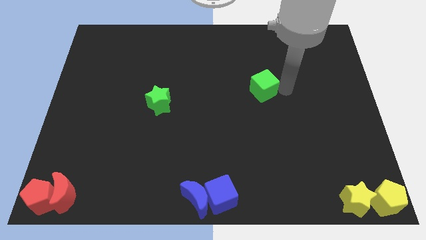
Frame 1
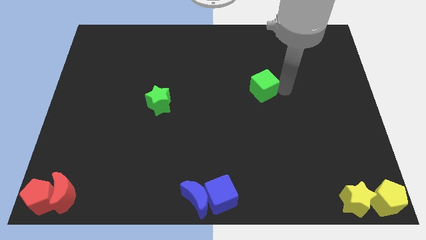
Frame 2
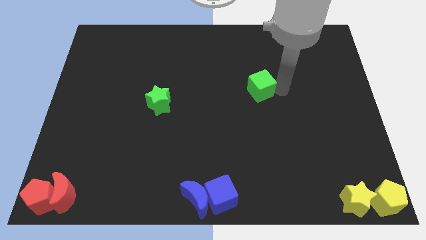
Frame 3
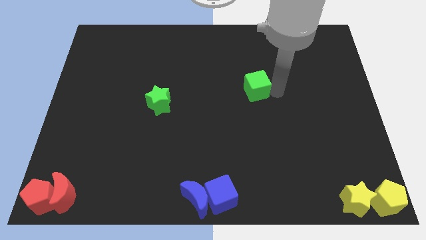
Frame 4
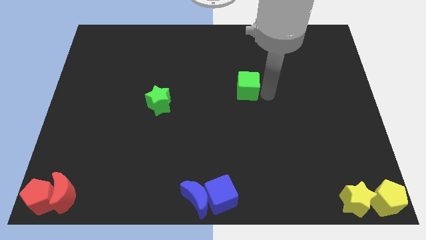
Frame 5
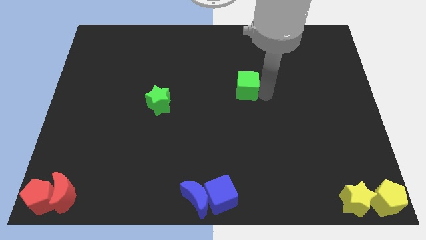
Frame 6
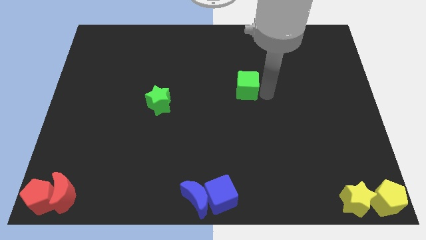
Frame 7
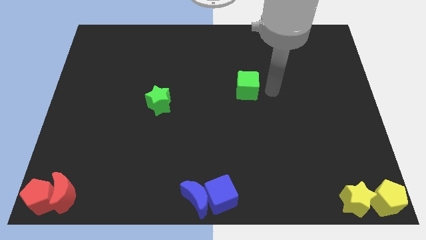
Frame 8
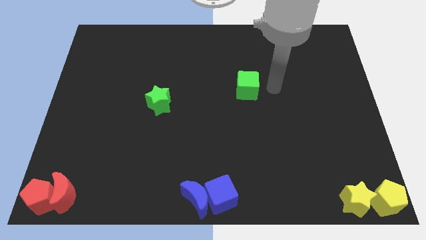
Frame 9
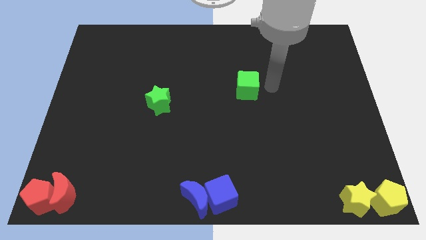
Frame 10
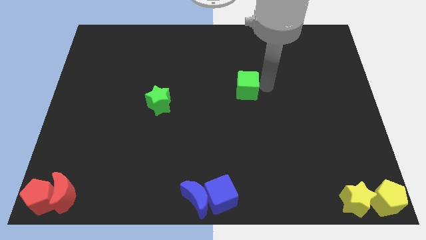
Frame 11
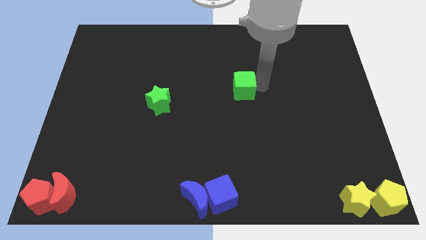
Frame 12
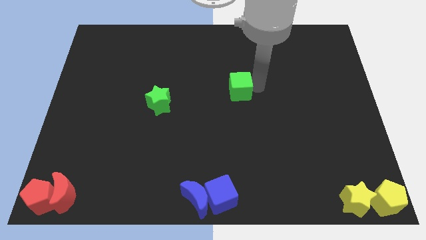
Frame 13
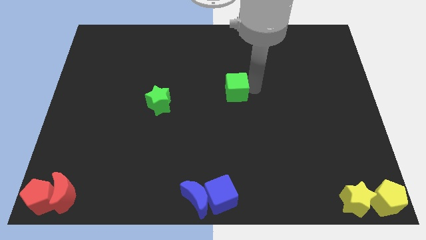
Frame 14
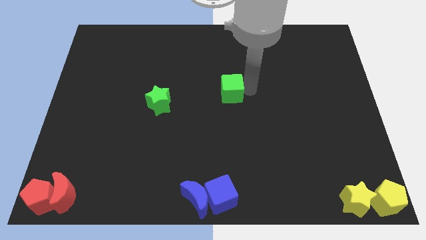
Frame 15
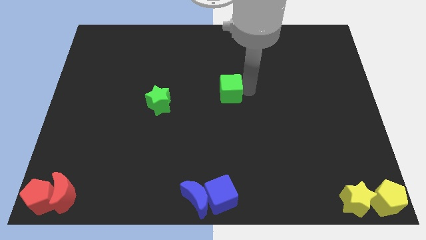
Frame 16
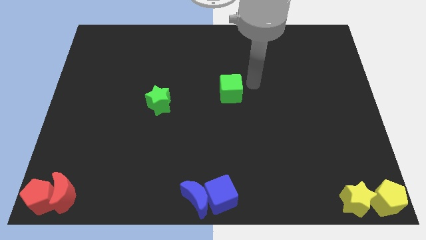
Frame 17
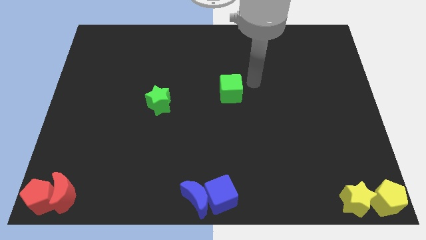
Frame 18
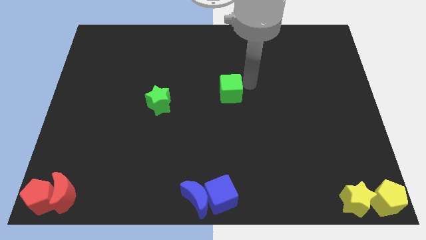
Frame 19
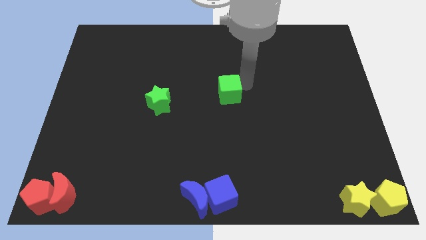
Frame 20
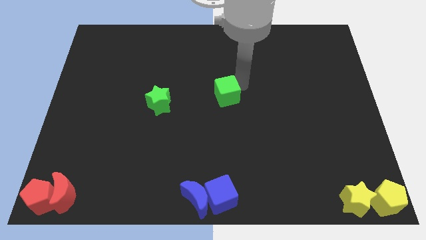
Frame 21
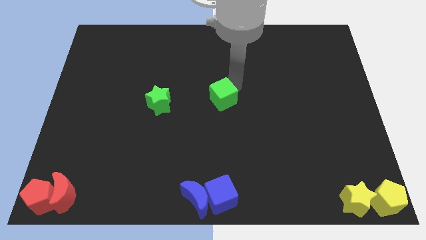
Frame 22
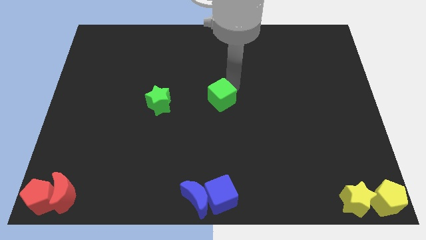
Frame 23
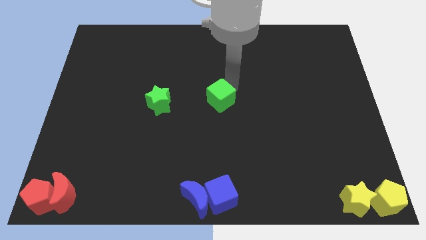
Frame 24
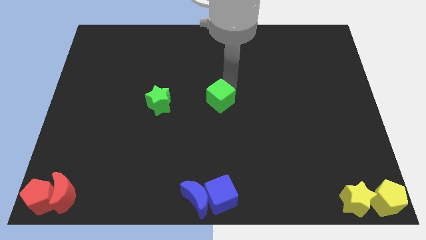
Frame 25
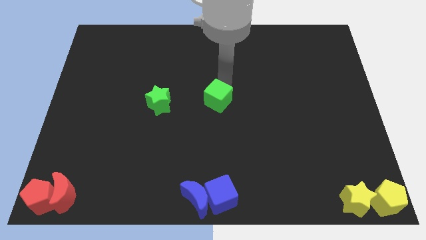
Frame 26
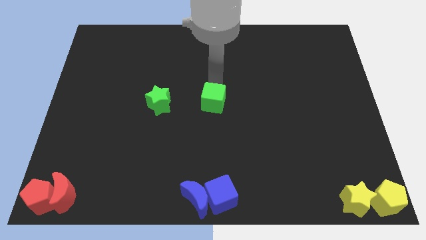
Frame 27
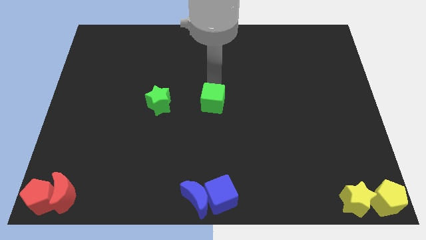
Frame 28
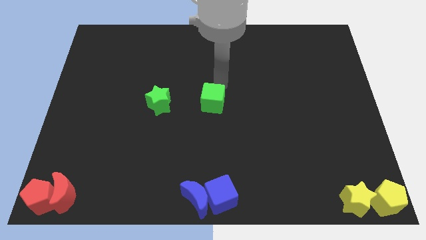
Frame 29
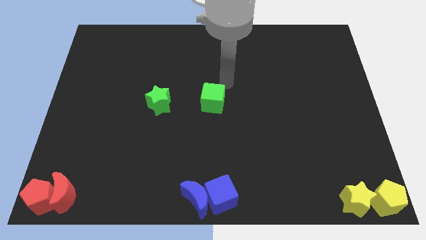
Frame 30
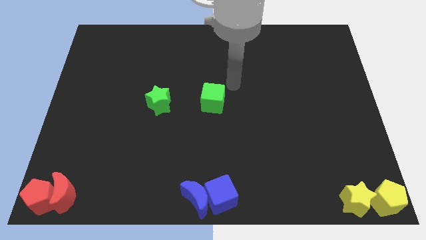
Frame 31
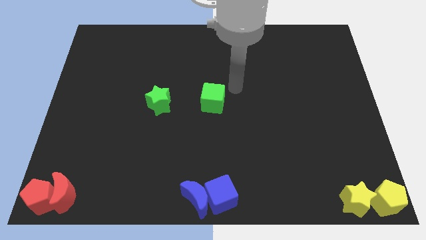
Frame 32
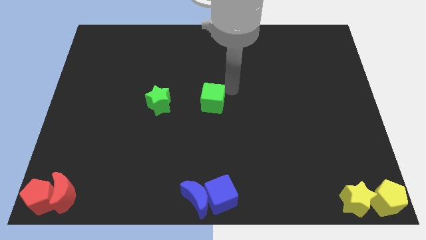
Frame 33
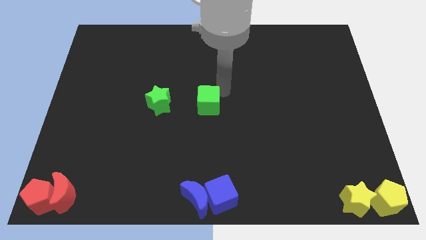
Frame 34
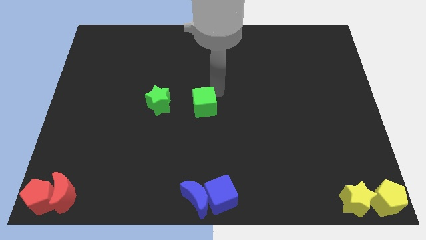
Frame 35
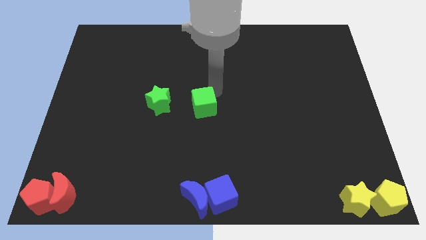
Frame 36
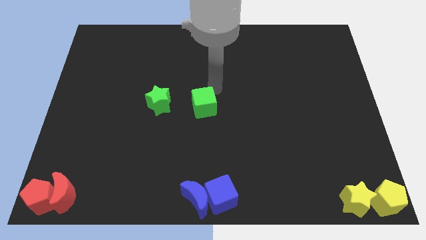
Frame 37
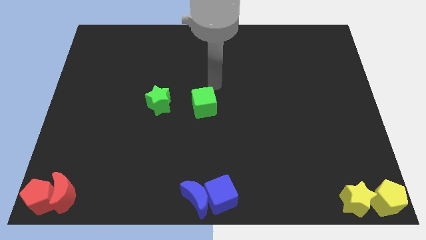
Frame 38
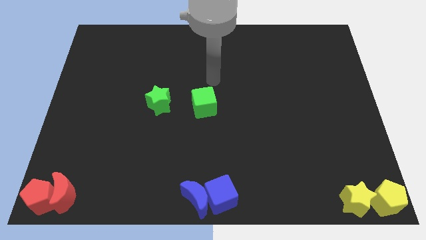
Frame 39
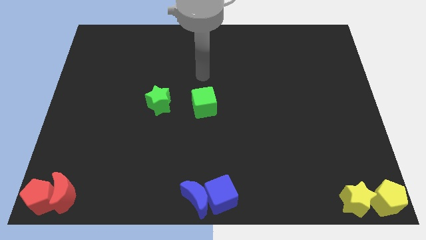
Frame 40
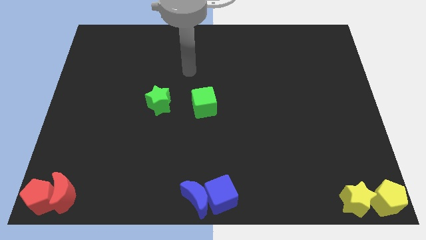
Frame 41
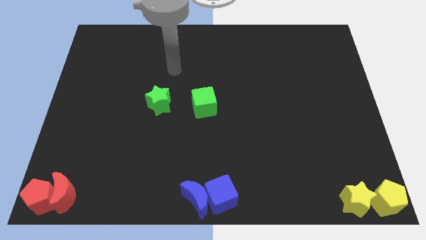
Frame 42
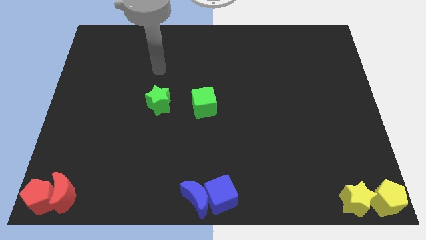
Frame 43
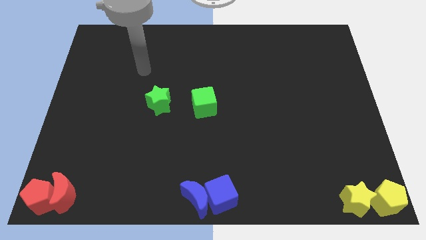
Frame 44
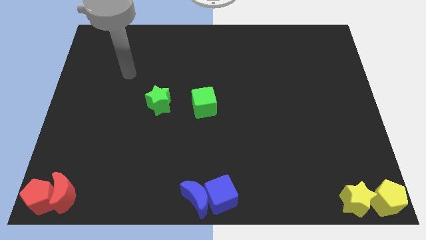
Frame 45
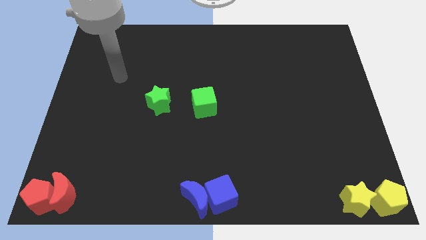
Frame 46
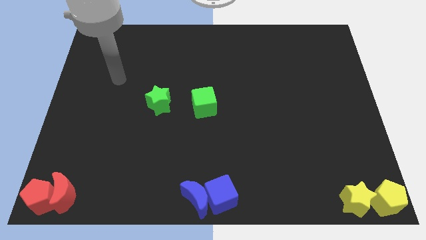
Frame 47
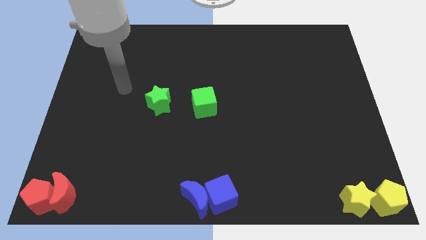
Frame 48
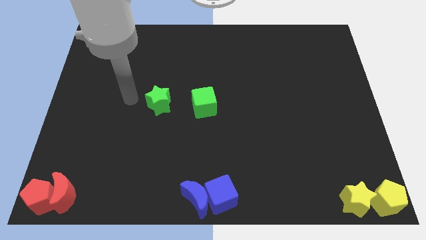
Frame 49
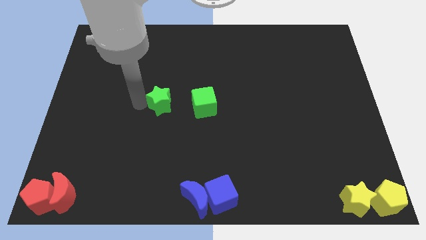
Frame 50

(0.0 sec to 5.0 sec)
push the green cube towards the right of green star

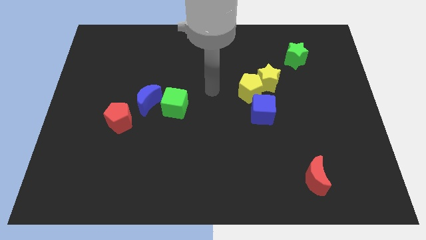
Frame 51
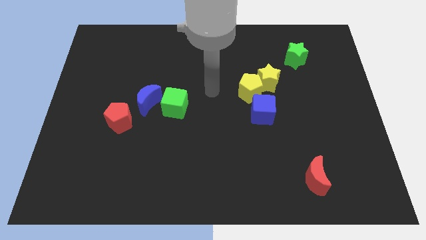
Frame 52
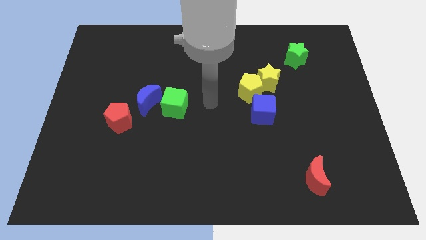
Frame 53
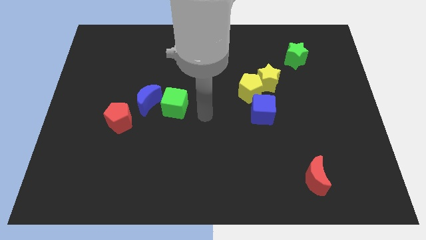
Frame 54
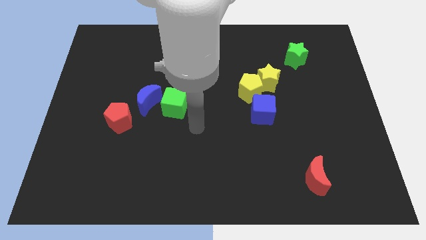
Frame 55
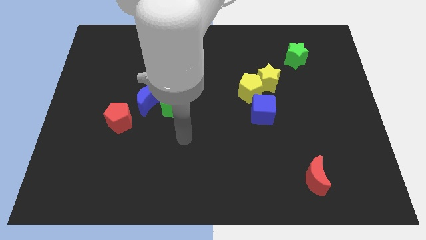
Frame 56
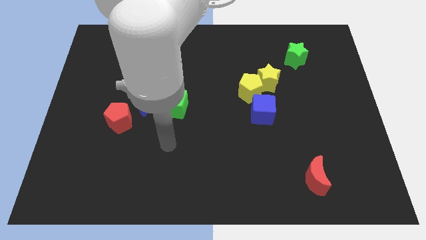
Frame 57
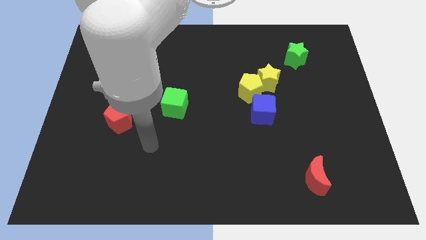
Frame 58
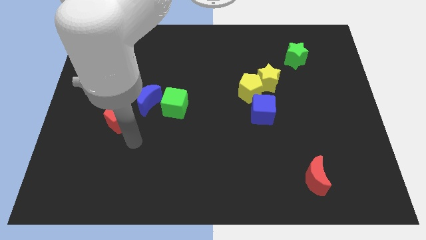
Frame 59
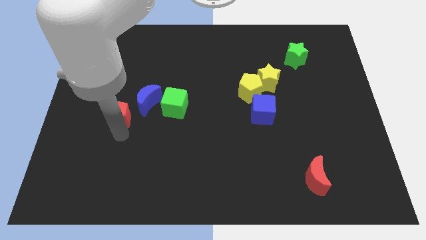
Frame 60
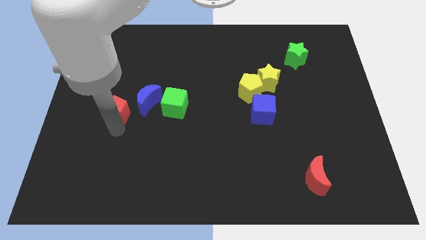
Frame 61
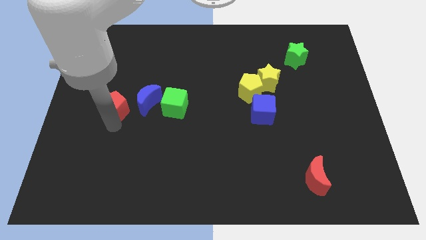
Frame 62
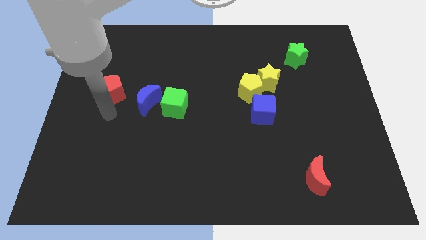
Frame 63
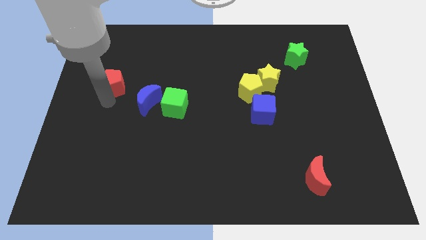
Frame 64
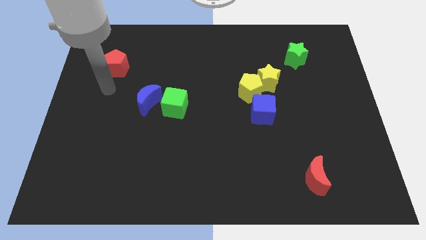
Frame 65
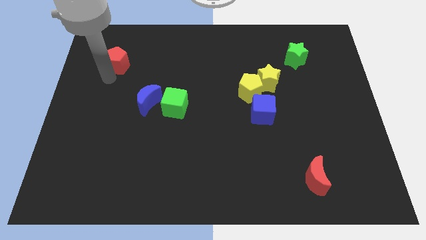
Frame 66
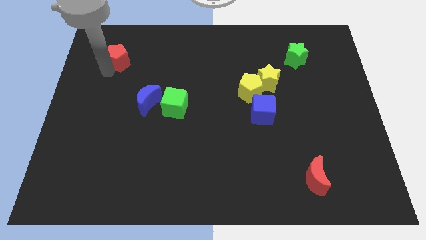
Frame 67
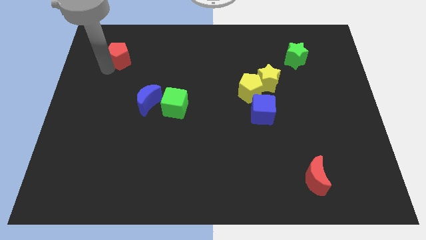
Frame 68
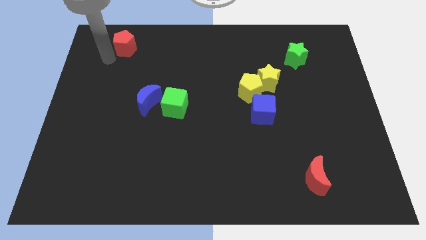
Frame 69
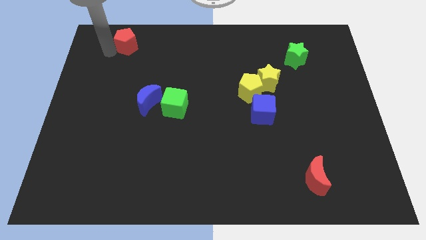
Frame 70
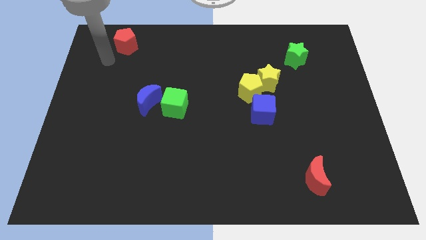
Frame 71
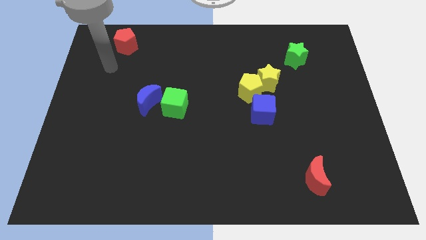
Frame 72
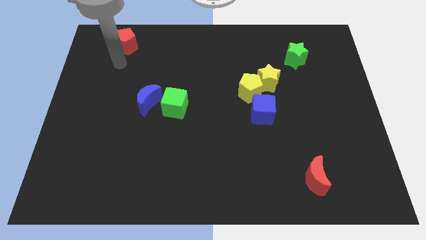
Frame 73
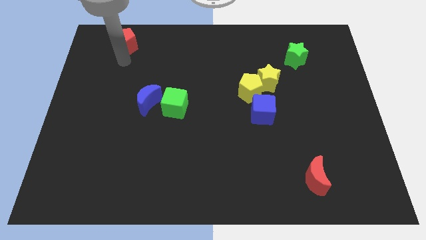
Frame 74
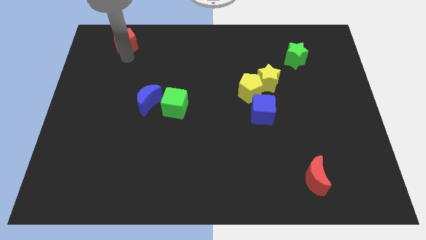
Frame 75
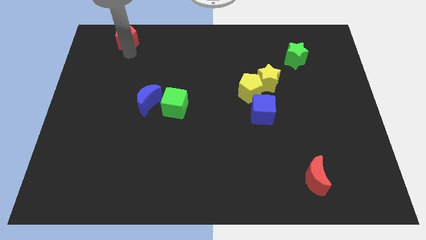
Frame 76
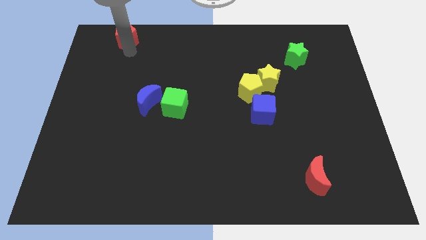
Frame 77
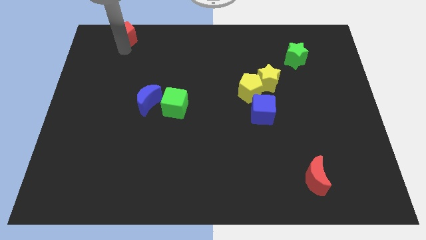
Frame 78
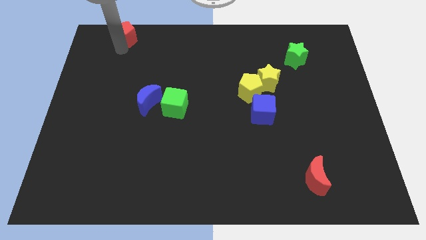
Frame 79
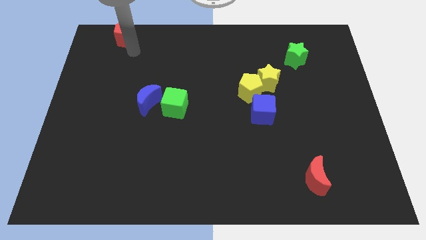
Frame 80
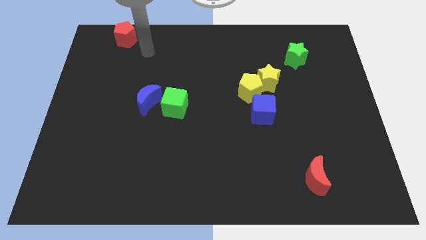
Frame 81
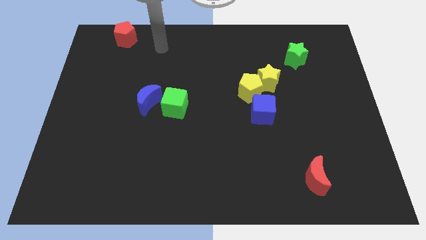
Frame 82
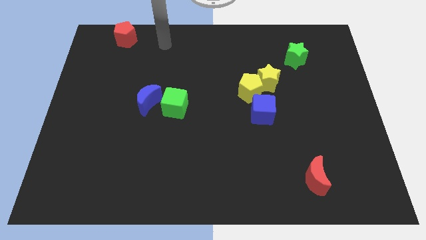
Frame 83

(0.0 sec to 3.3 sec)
move the red pentagon to the top of the board

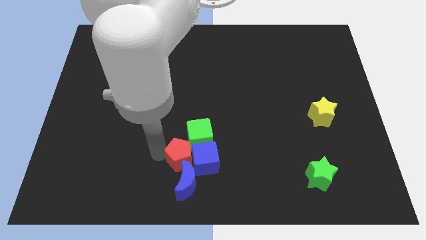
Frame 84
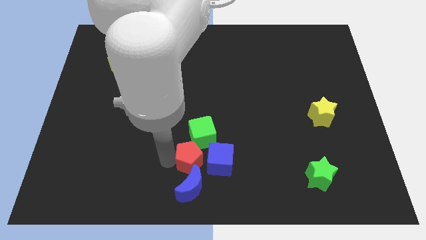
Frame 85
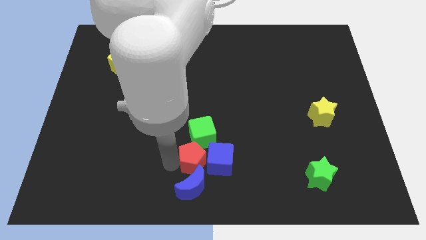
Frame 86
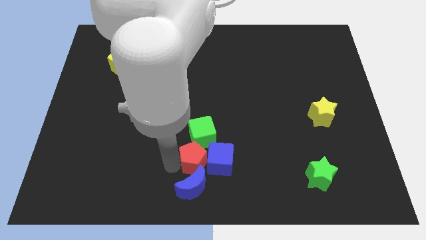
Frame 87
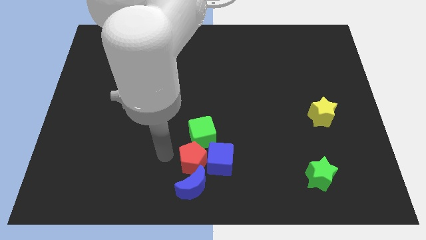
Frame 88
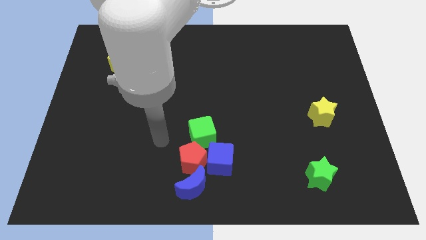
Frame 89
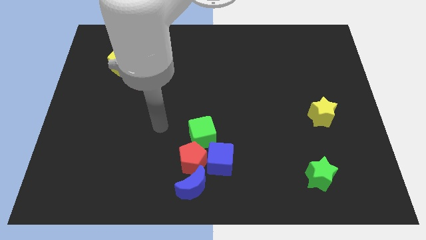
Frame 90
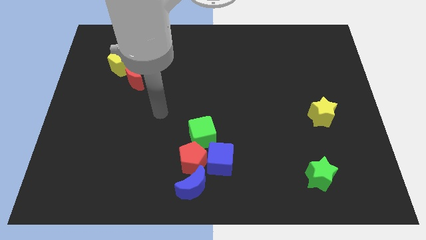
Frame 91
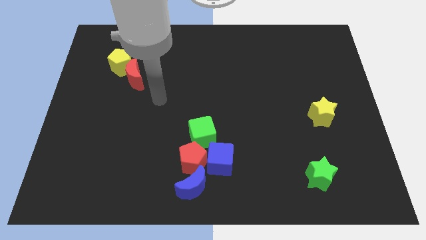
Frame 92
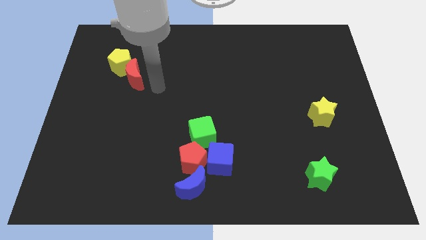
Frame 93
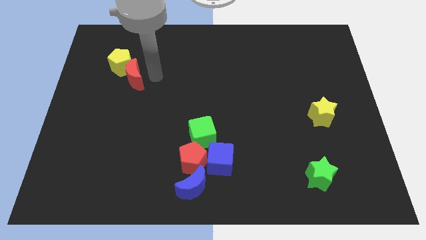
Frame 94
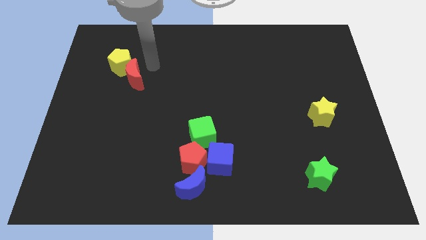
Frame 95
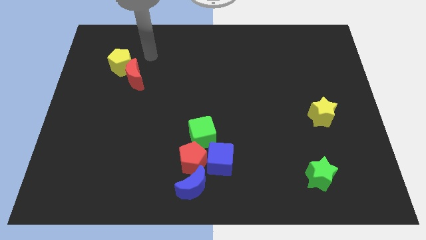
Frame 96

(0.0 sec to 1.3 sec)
move your arm away from red pentagon
